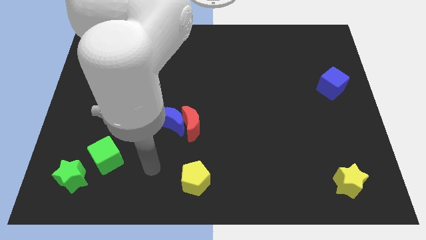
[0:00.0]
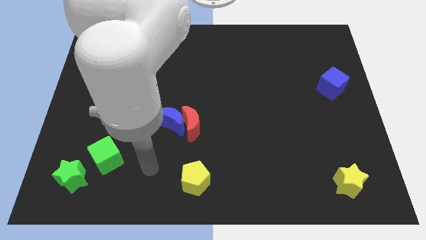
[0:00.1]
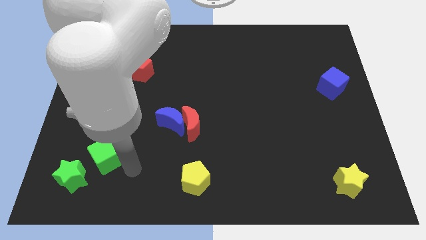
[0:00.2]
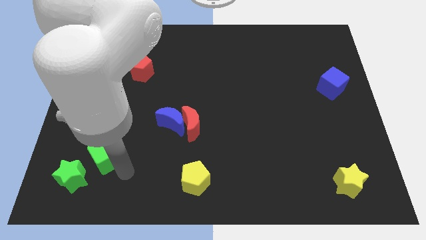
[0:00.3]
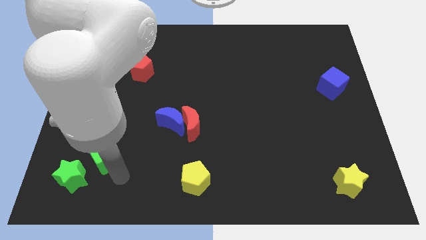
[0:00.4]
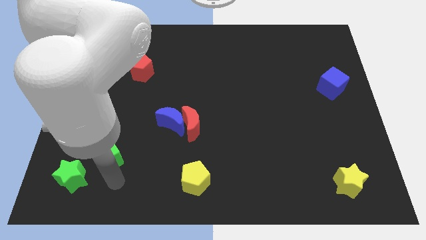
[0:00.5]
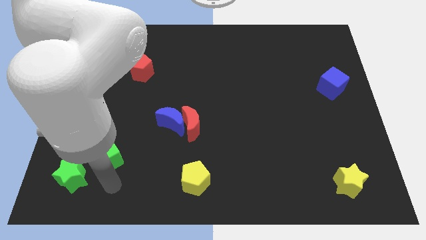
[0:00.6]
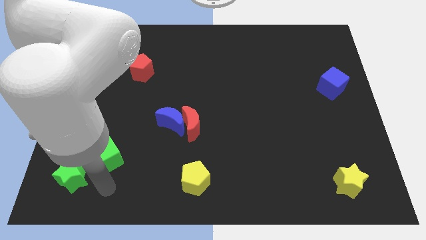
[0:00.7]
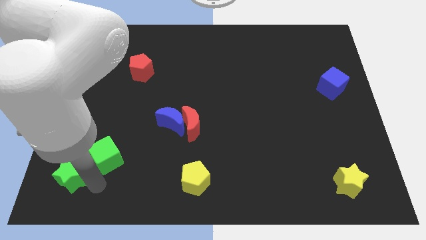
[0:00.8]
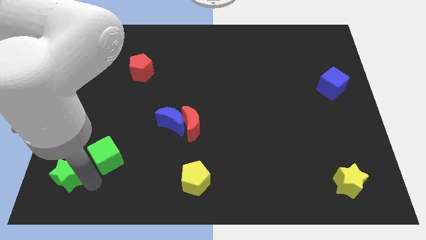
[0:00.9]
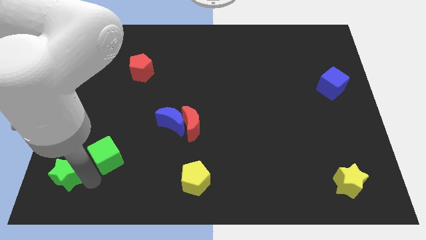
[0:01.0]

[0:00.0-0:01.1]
tap the green star

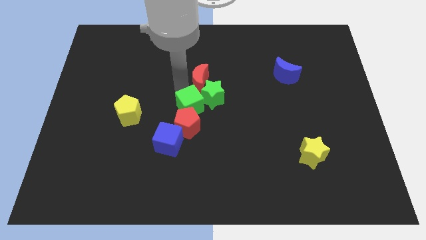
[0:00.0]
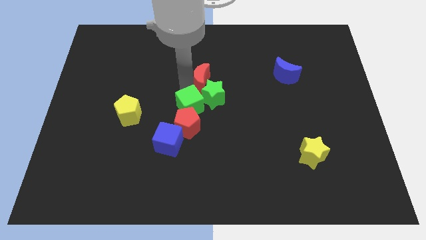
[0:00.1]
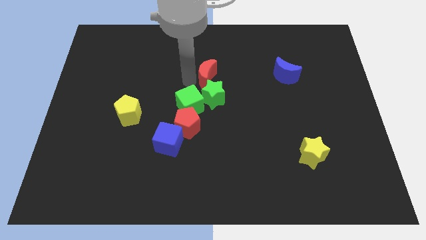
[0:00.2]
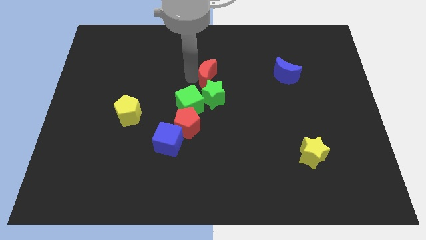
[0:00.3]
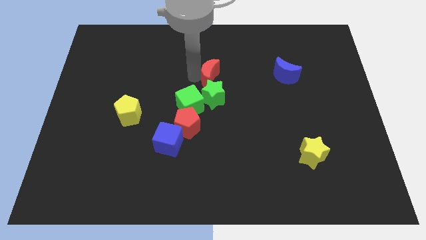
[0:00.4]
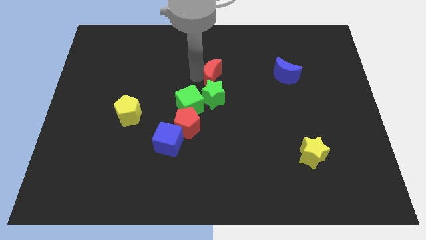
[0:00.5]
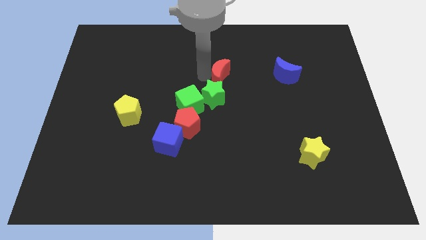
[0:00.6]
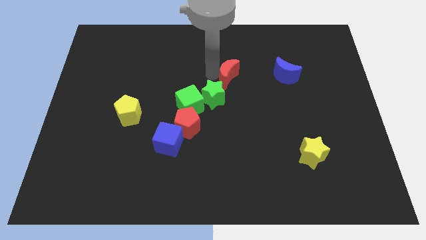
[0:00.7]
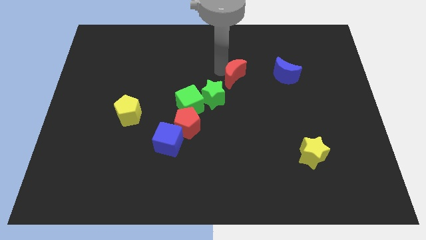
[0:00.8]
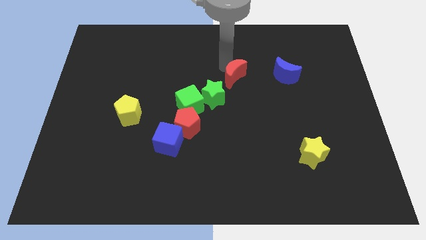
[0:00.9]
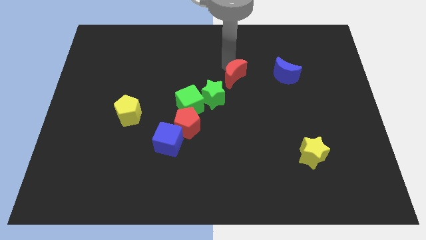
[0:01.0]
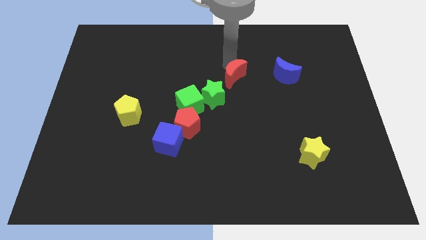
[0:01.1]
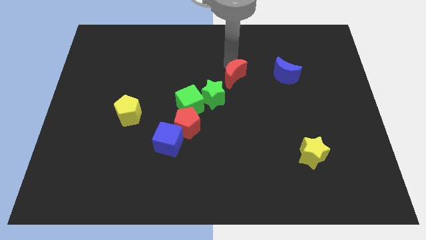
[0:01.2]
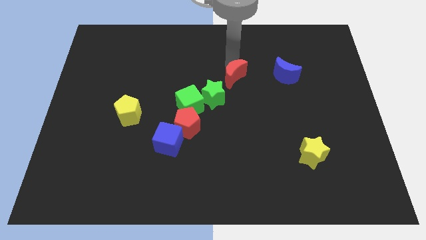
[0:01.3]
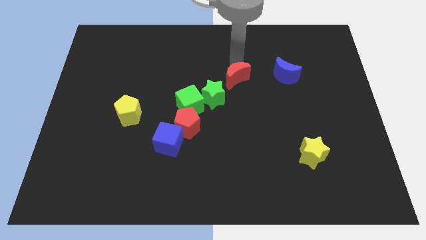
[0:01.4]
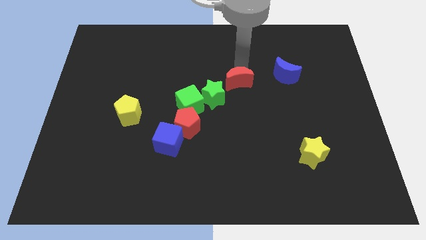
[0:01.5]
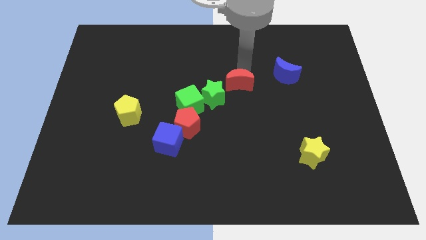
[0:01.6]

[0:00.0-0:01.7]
push the red crescent diagonally top to the green star

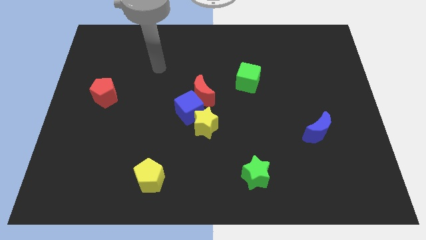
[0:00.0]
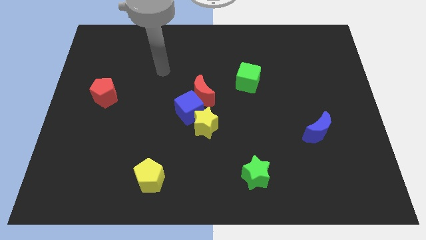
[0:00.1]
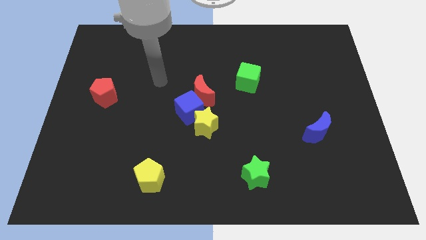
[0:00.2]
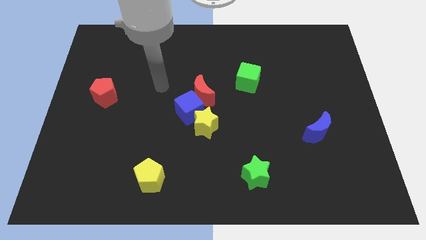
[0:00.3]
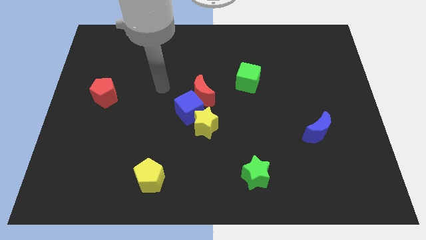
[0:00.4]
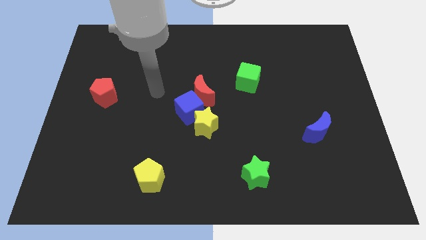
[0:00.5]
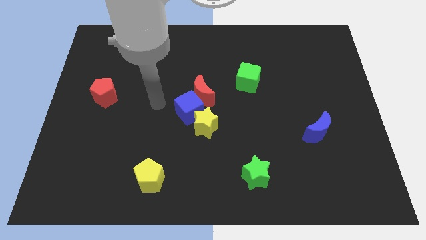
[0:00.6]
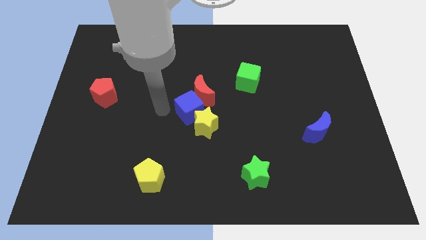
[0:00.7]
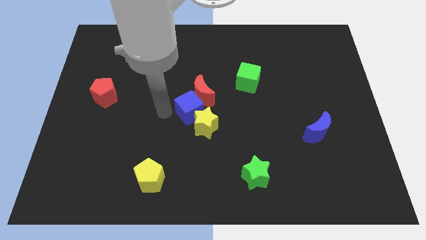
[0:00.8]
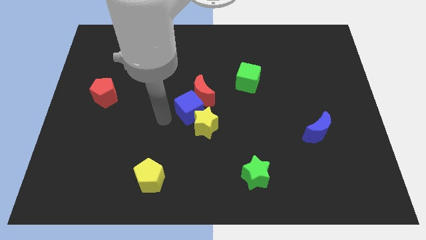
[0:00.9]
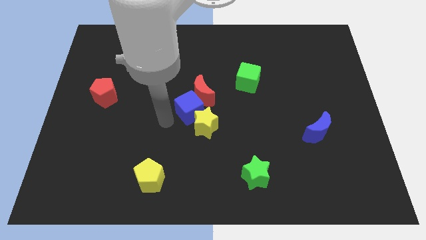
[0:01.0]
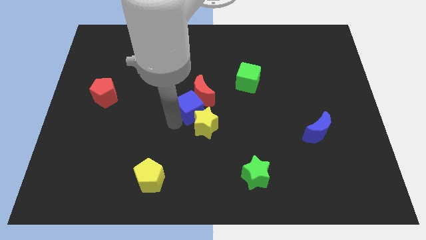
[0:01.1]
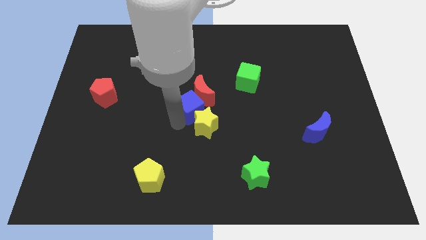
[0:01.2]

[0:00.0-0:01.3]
move your arm left to the blue cube

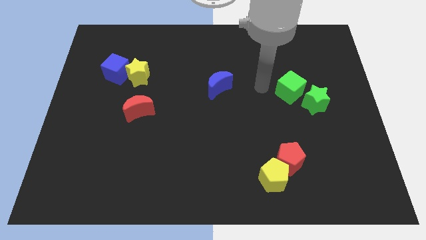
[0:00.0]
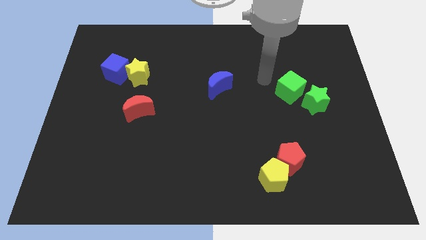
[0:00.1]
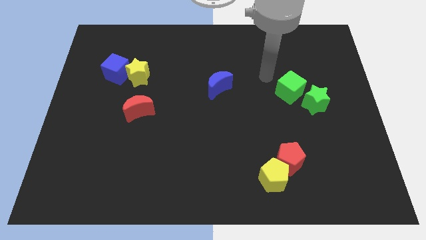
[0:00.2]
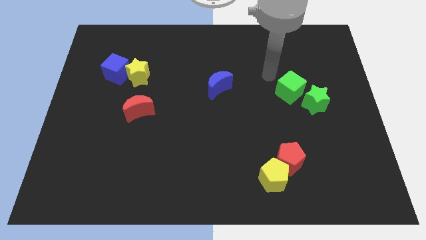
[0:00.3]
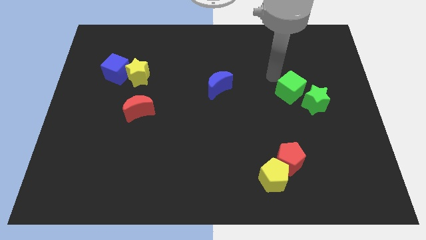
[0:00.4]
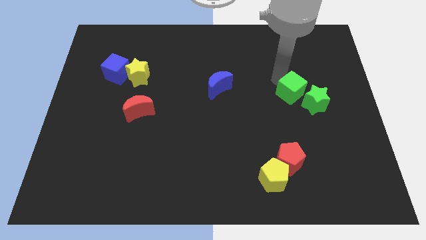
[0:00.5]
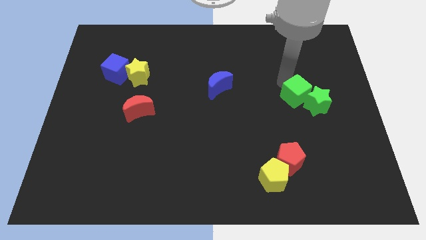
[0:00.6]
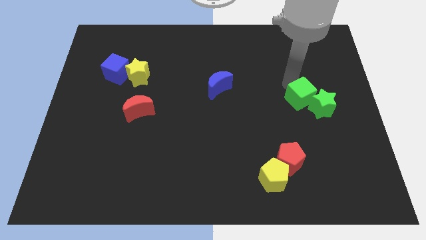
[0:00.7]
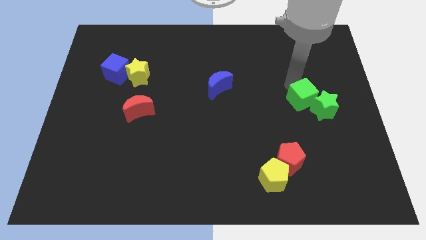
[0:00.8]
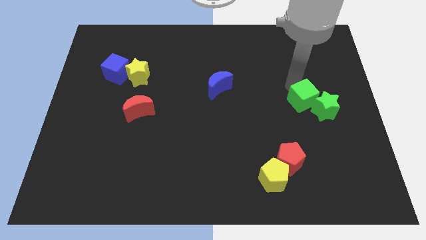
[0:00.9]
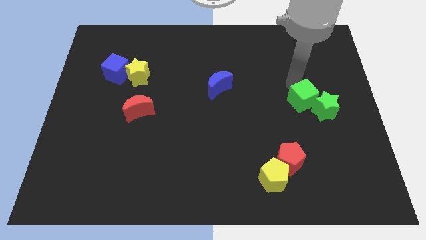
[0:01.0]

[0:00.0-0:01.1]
push the green cube into green star

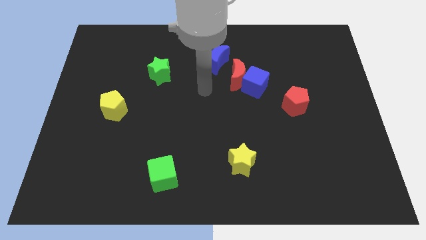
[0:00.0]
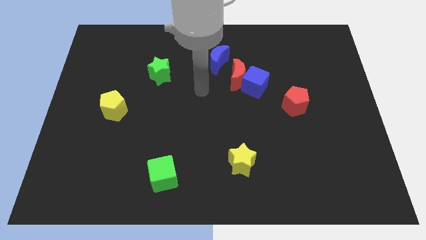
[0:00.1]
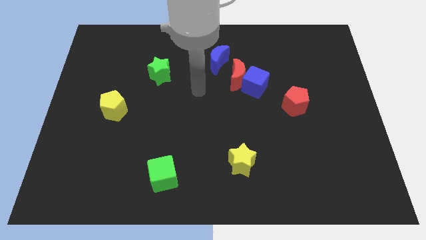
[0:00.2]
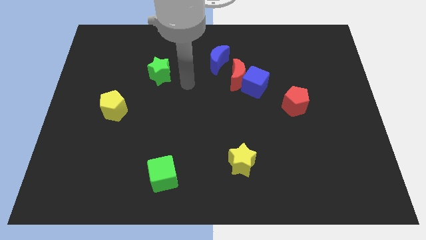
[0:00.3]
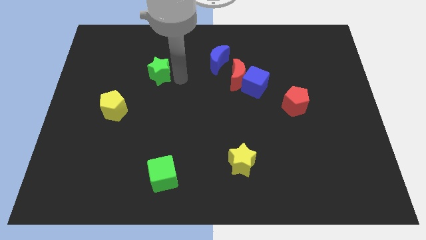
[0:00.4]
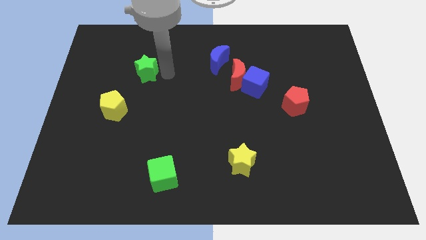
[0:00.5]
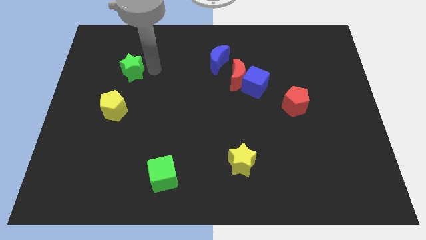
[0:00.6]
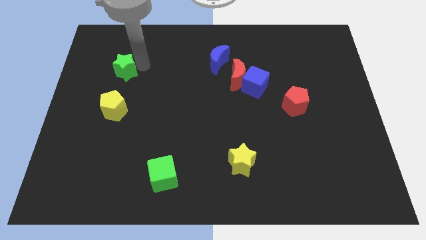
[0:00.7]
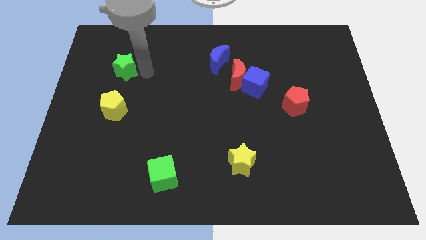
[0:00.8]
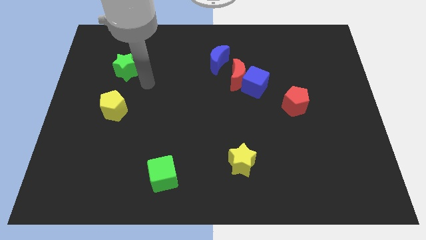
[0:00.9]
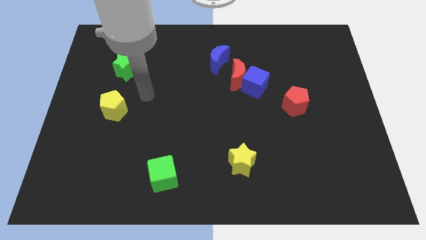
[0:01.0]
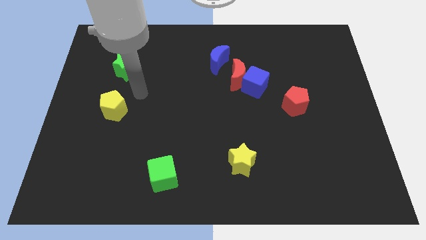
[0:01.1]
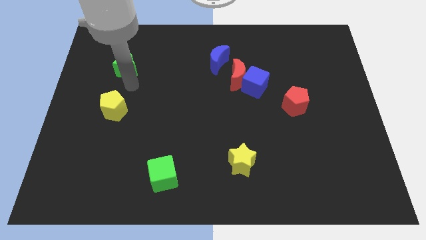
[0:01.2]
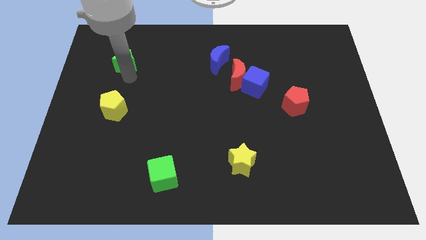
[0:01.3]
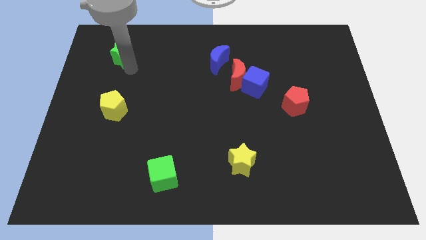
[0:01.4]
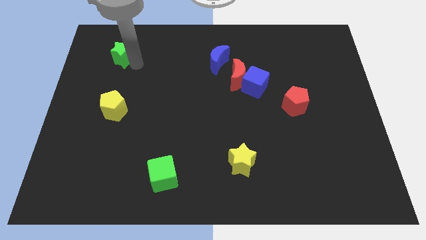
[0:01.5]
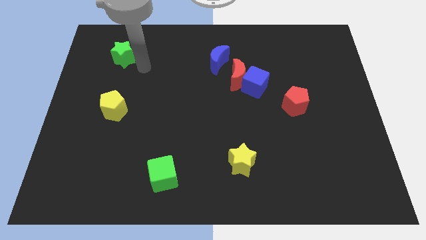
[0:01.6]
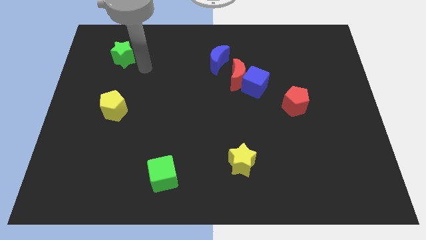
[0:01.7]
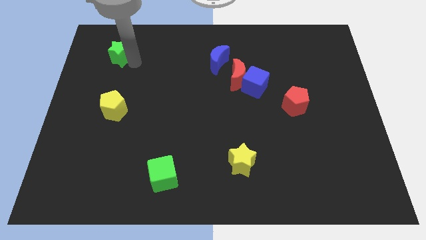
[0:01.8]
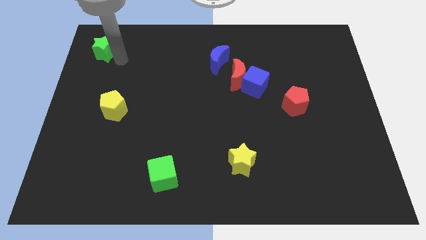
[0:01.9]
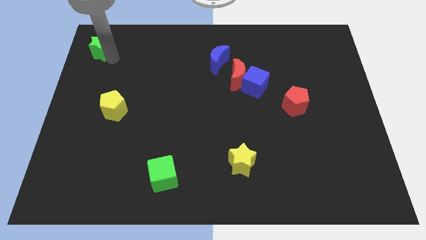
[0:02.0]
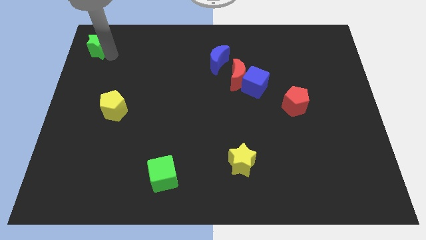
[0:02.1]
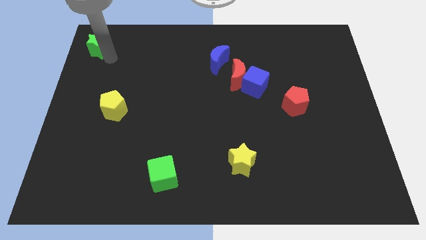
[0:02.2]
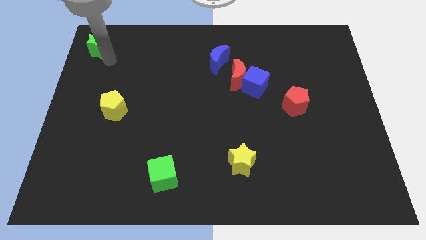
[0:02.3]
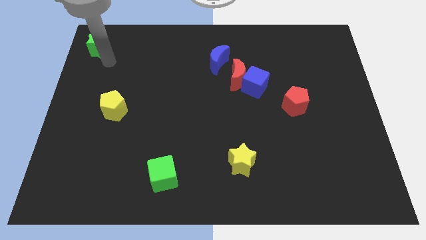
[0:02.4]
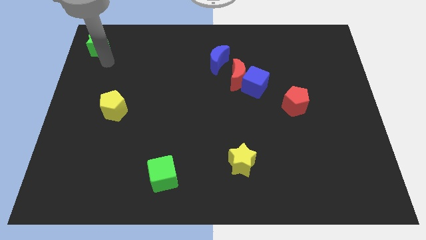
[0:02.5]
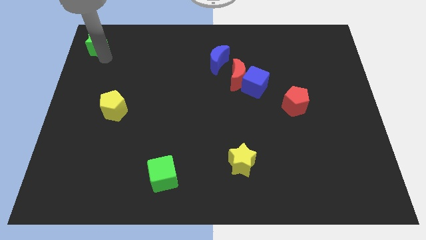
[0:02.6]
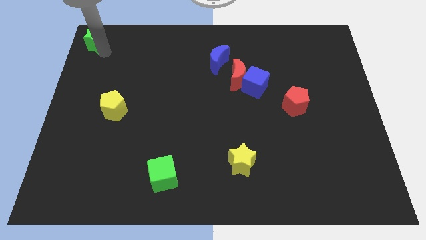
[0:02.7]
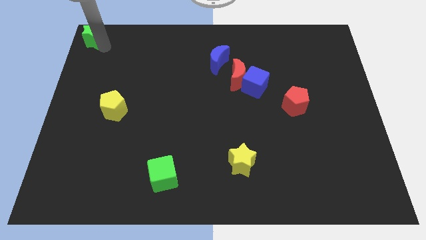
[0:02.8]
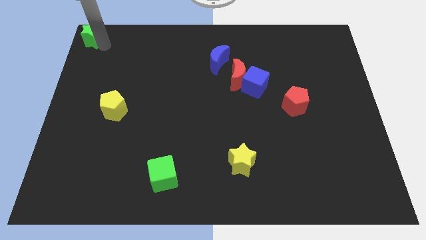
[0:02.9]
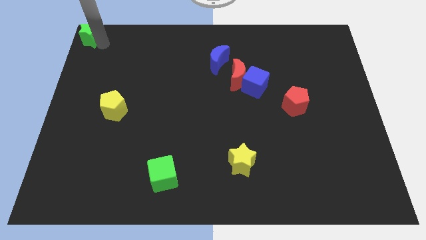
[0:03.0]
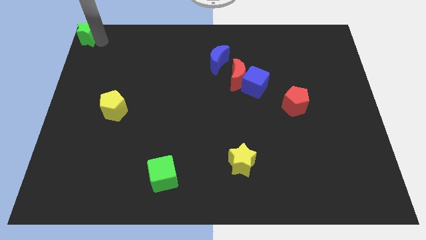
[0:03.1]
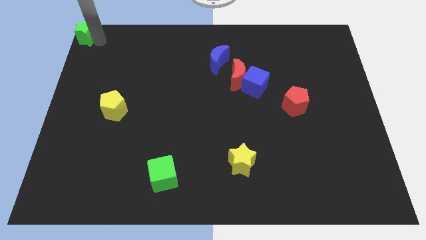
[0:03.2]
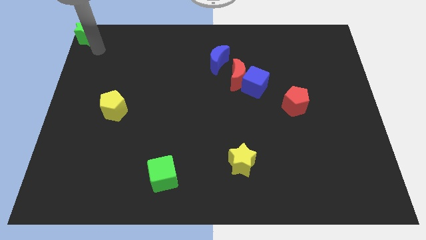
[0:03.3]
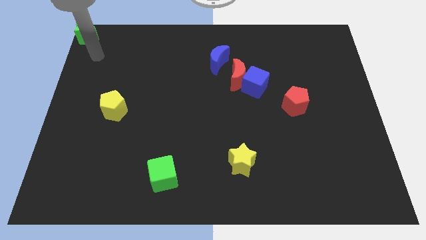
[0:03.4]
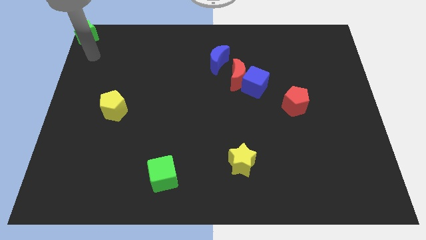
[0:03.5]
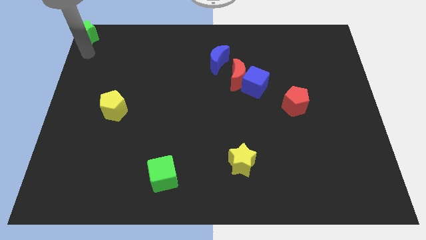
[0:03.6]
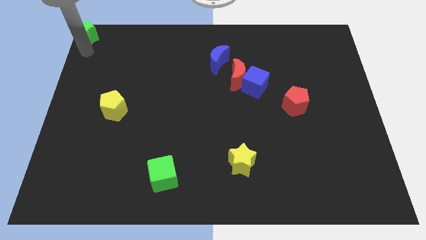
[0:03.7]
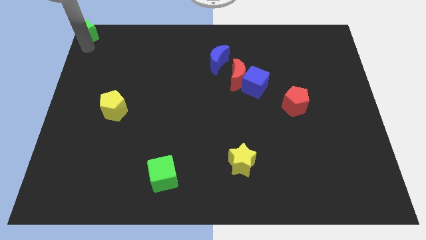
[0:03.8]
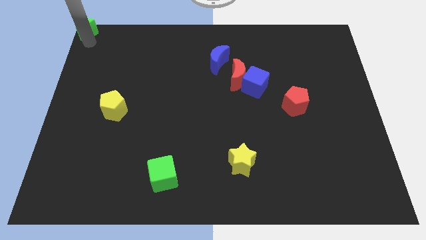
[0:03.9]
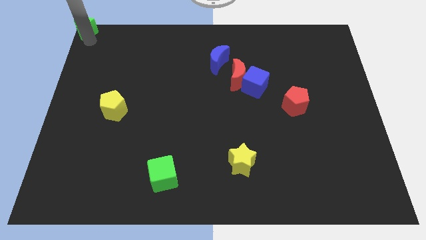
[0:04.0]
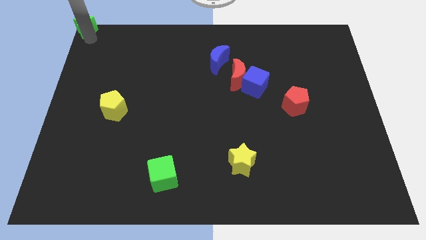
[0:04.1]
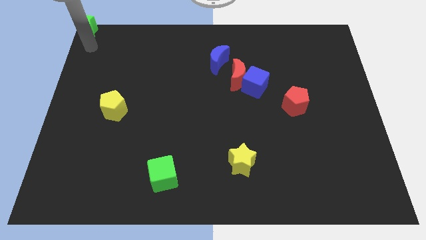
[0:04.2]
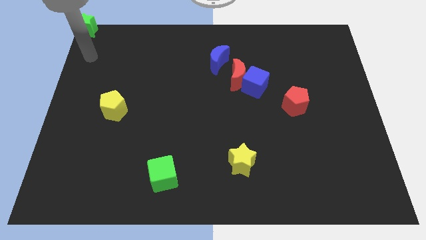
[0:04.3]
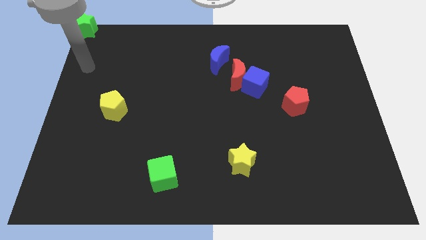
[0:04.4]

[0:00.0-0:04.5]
move the green cube to the top left corner
